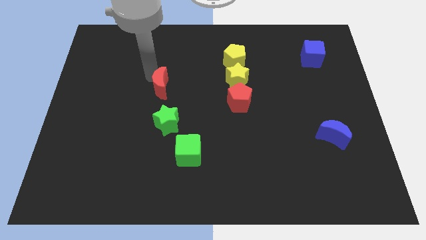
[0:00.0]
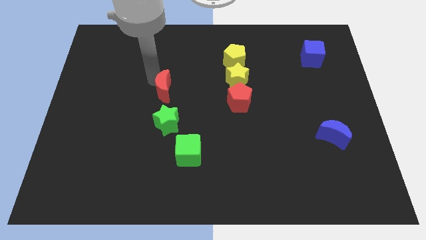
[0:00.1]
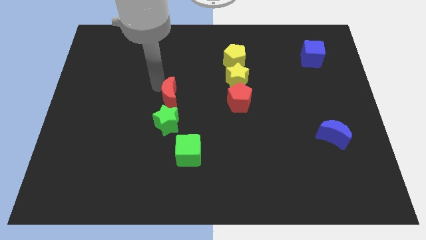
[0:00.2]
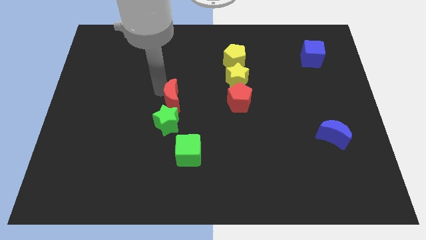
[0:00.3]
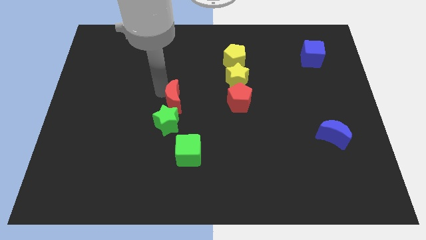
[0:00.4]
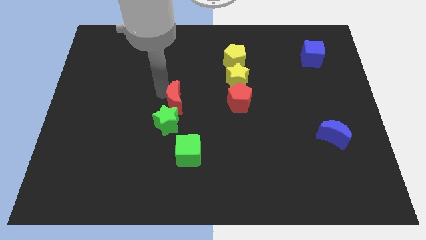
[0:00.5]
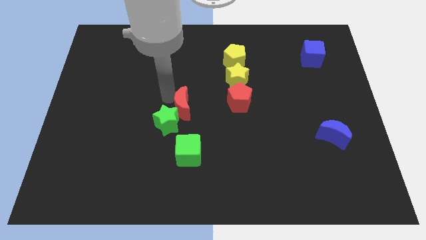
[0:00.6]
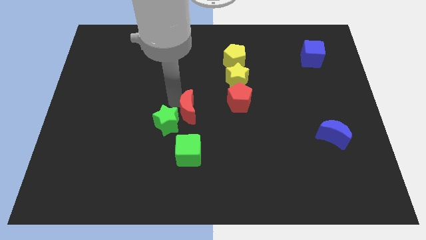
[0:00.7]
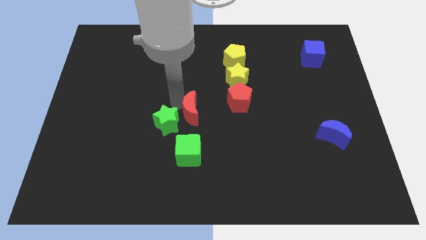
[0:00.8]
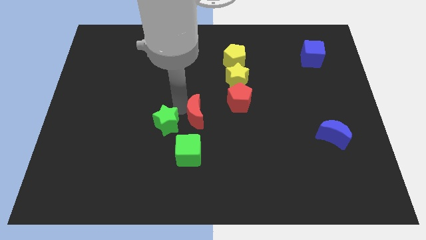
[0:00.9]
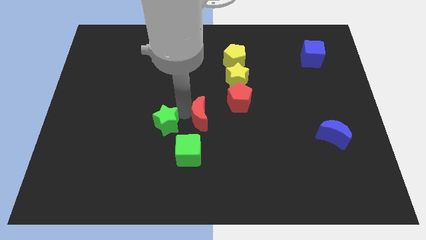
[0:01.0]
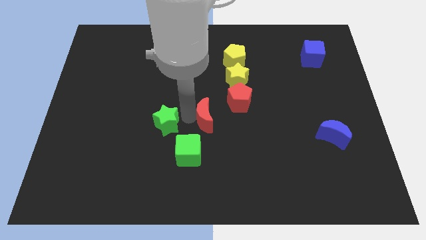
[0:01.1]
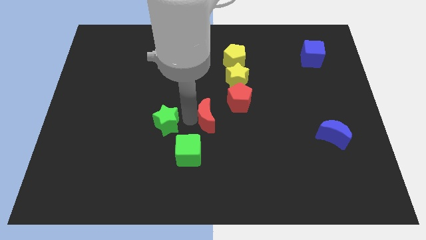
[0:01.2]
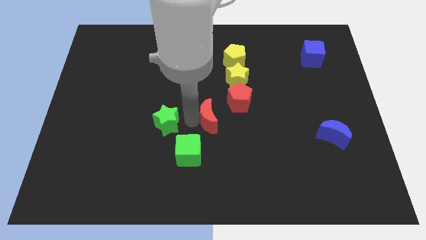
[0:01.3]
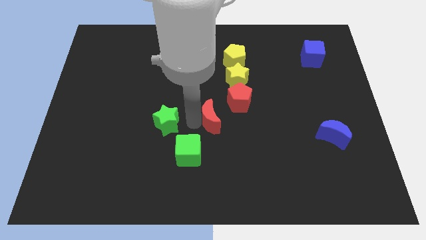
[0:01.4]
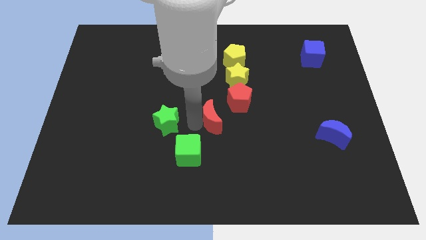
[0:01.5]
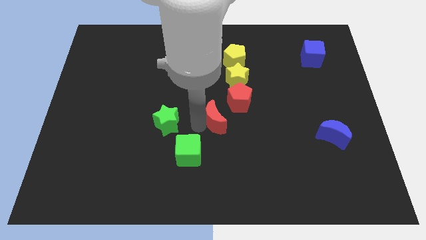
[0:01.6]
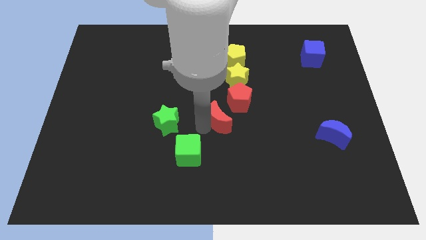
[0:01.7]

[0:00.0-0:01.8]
put red moon parallel right to green star

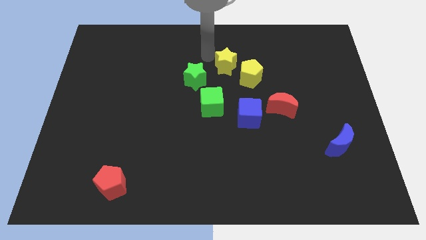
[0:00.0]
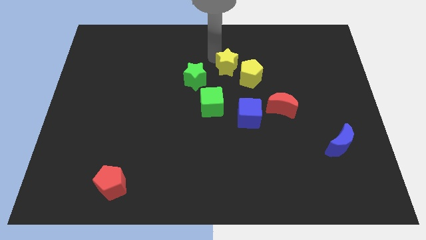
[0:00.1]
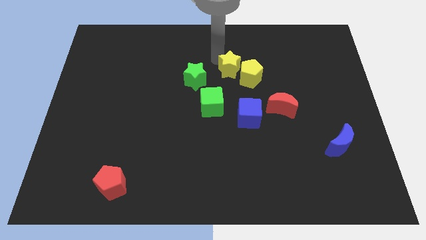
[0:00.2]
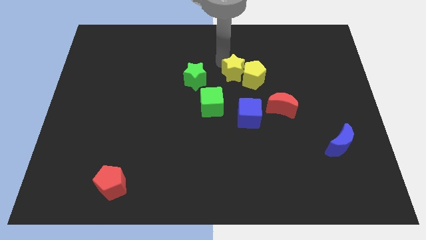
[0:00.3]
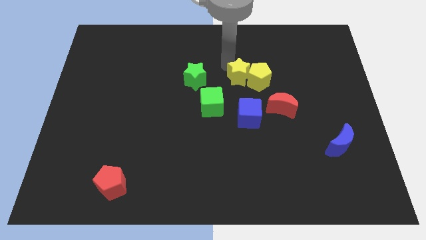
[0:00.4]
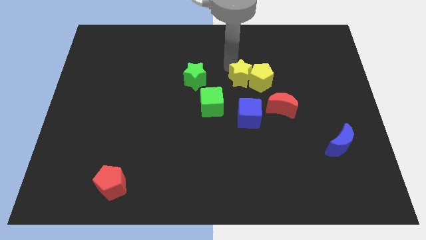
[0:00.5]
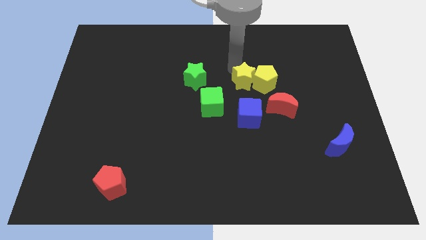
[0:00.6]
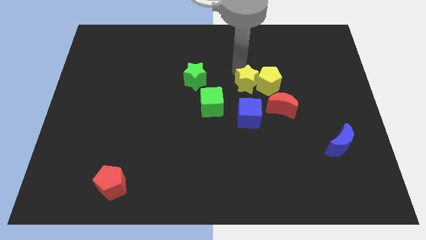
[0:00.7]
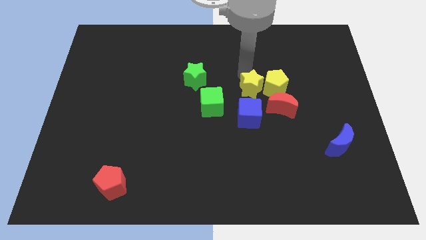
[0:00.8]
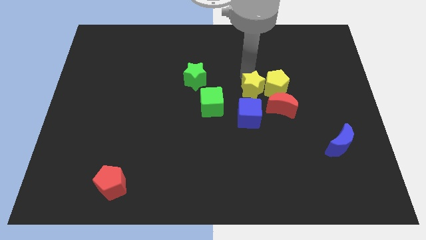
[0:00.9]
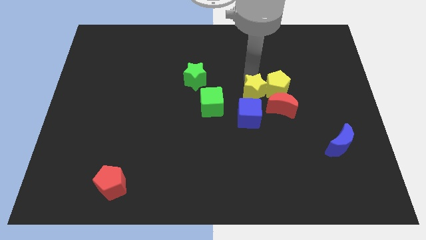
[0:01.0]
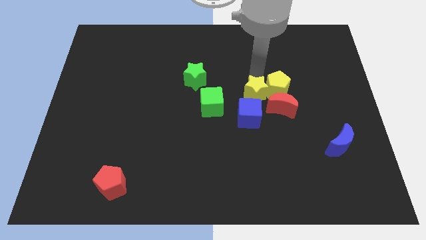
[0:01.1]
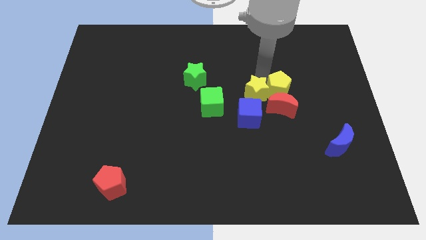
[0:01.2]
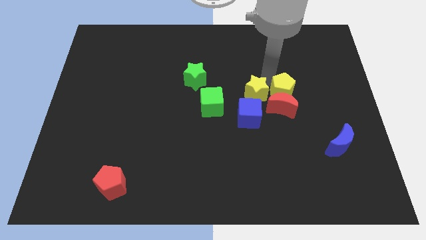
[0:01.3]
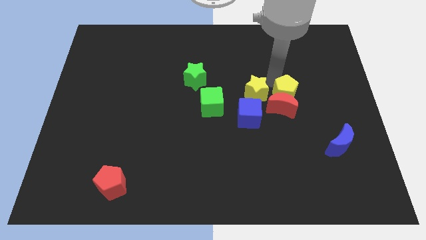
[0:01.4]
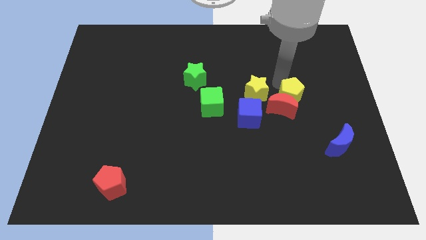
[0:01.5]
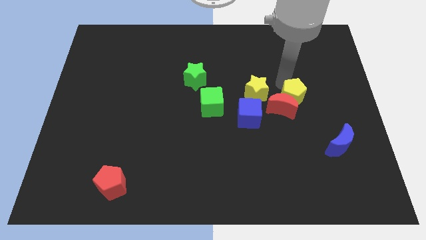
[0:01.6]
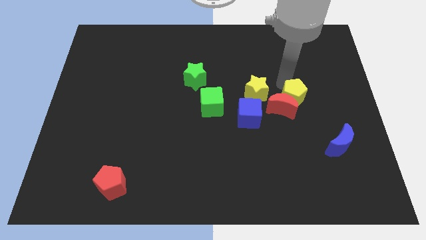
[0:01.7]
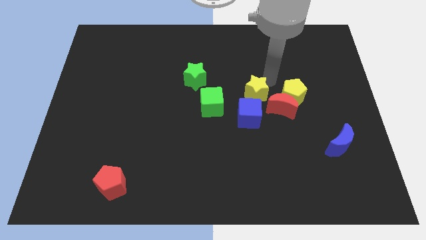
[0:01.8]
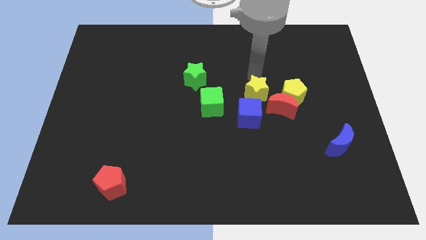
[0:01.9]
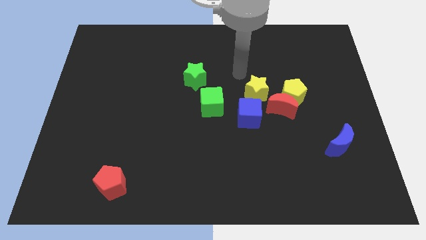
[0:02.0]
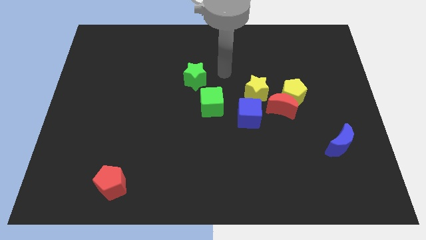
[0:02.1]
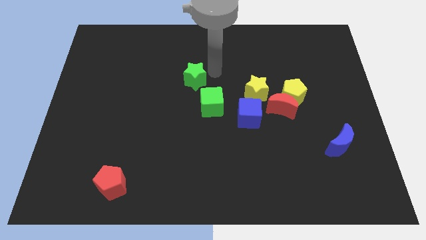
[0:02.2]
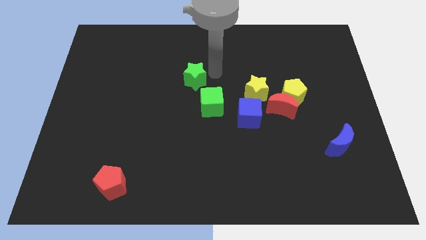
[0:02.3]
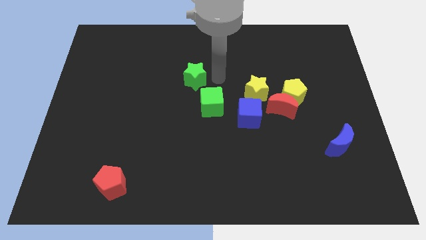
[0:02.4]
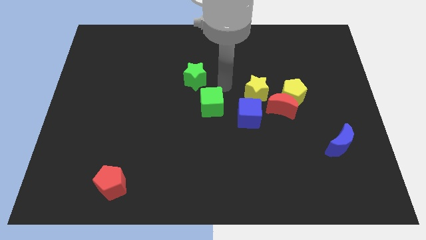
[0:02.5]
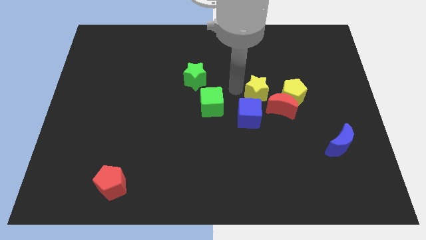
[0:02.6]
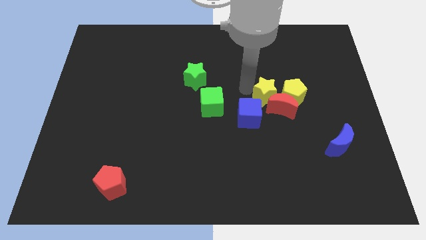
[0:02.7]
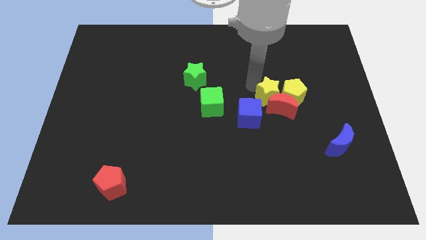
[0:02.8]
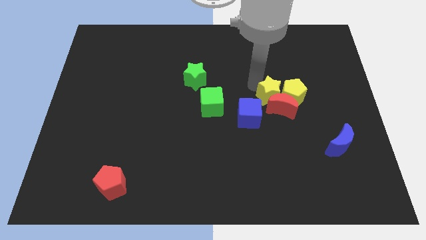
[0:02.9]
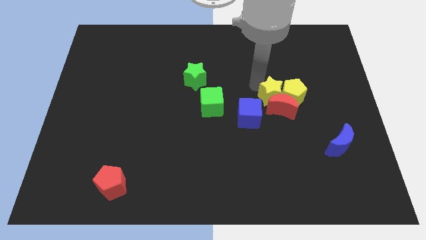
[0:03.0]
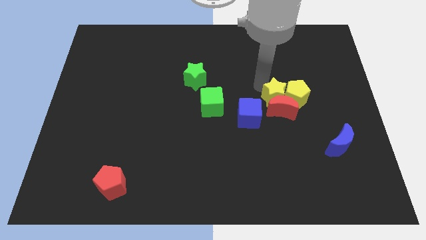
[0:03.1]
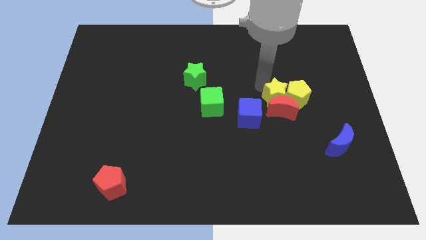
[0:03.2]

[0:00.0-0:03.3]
push the yellow star into the yellow pentagon

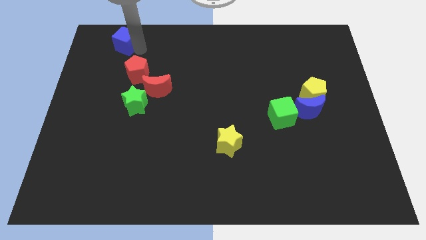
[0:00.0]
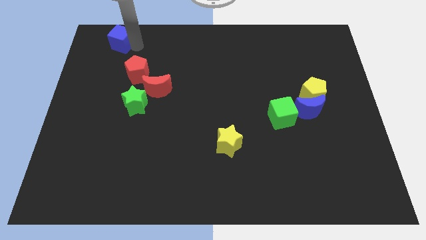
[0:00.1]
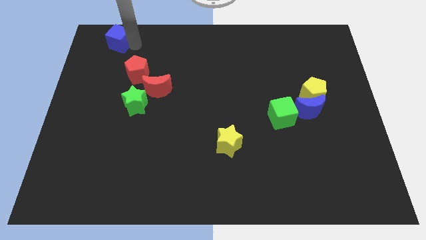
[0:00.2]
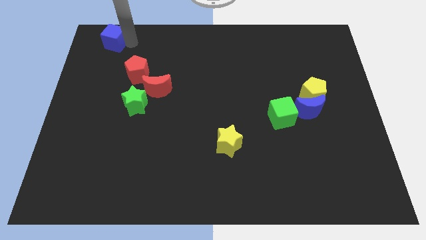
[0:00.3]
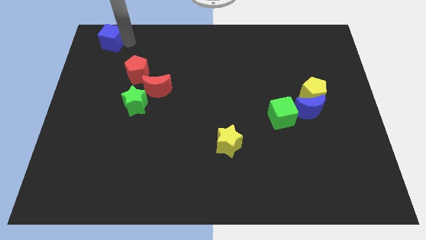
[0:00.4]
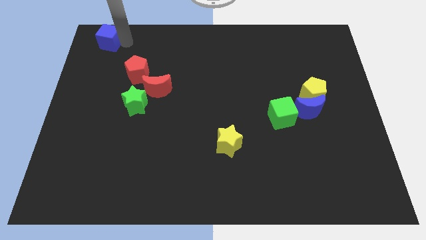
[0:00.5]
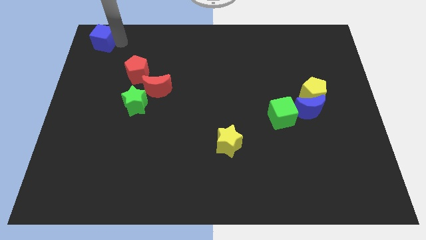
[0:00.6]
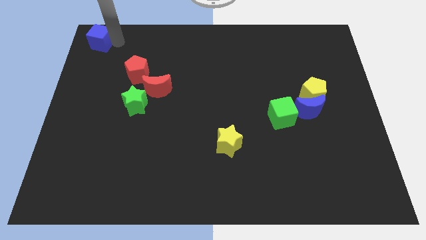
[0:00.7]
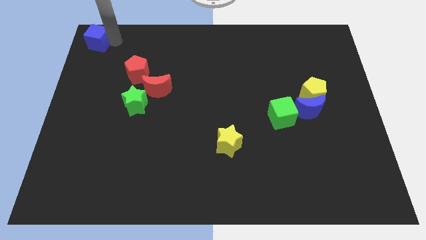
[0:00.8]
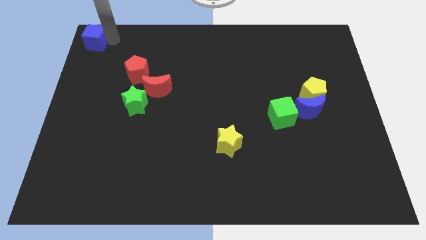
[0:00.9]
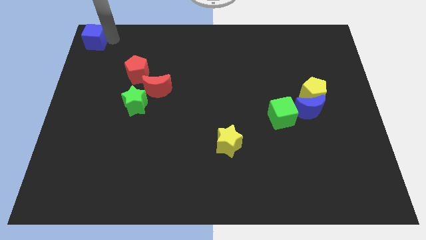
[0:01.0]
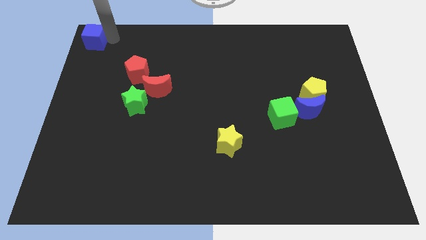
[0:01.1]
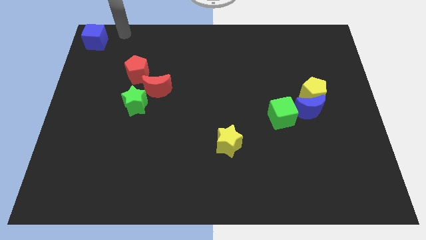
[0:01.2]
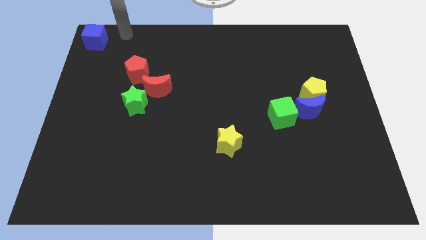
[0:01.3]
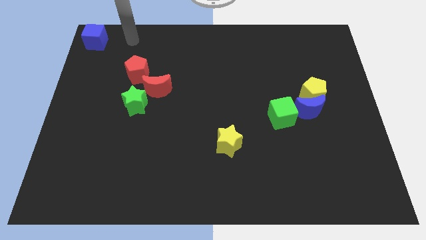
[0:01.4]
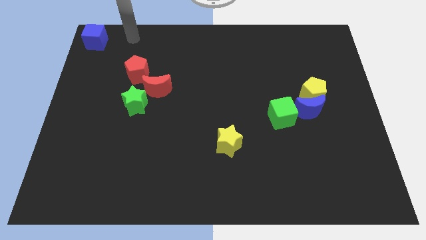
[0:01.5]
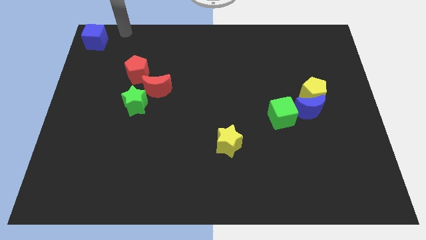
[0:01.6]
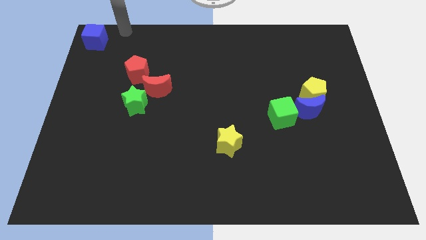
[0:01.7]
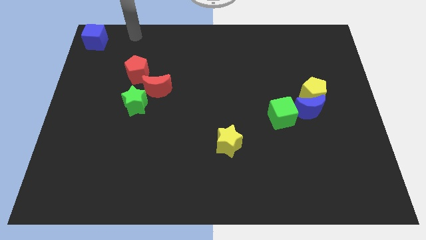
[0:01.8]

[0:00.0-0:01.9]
push the blue cube towards the top left of the board

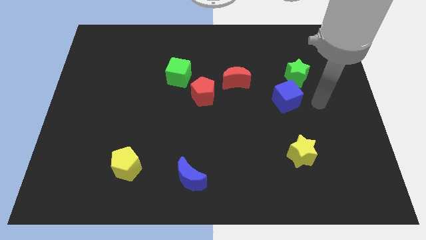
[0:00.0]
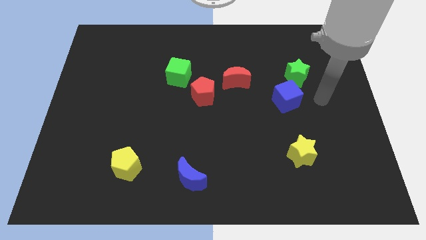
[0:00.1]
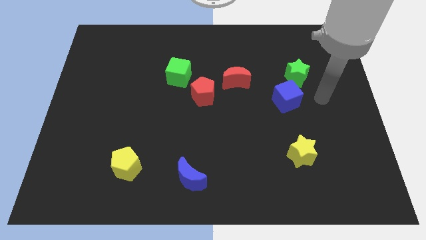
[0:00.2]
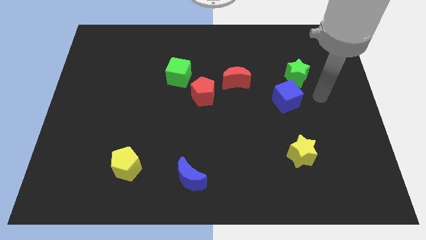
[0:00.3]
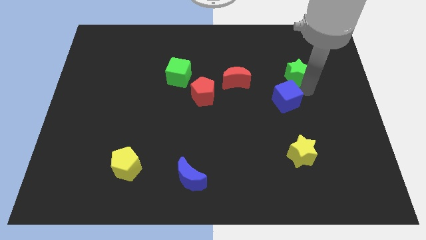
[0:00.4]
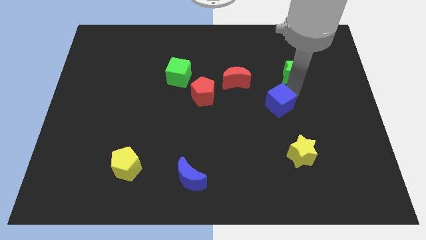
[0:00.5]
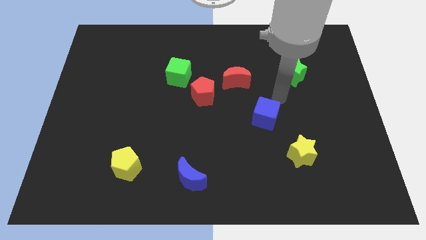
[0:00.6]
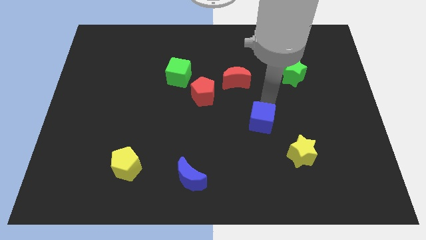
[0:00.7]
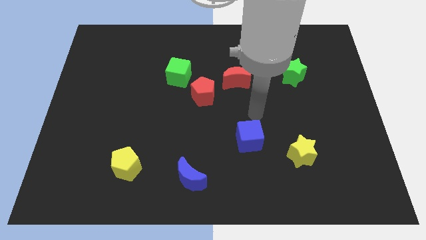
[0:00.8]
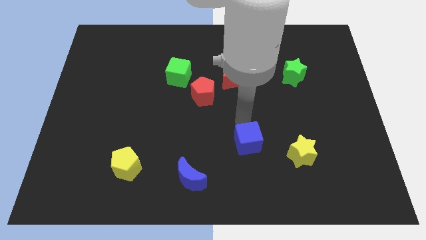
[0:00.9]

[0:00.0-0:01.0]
separate the blue cube from the green star

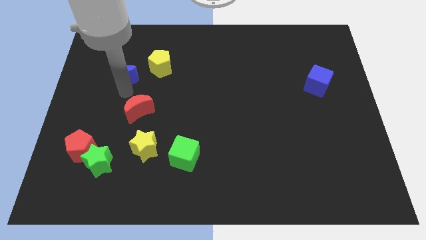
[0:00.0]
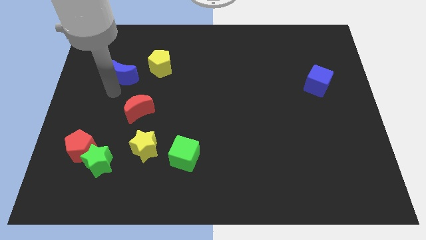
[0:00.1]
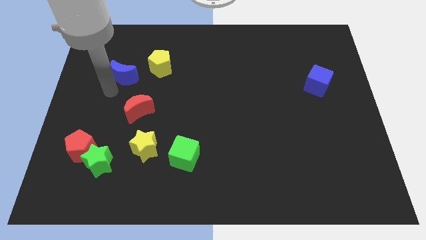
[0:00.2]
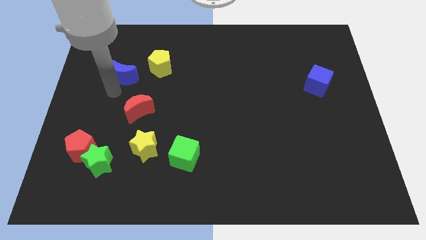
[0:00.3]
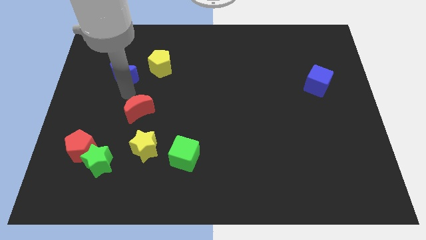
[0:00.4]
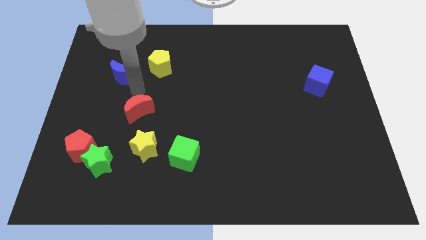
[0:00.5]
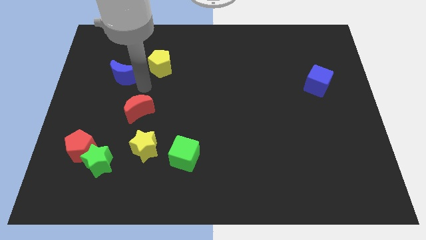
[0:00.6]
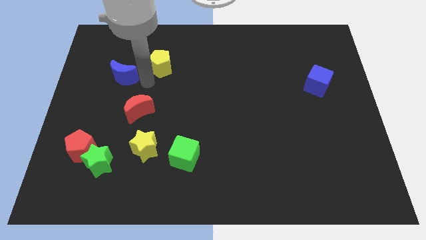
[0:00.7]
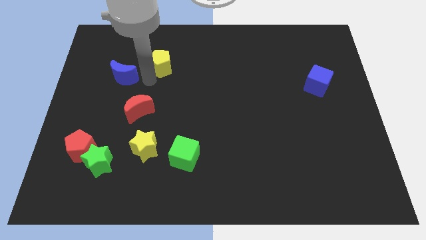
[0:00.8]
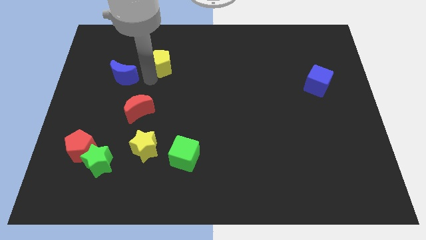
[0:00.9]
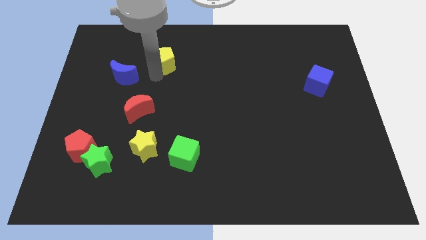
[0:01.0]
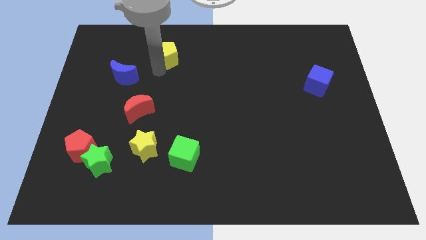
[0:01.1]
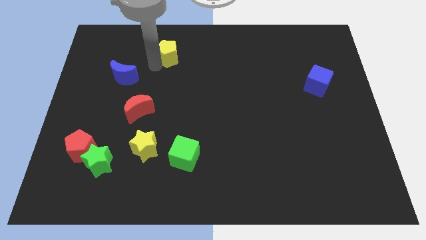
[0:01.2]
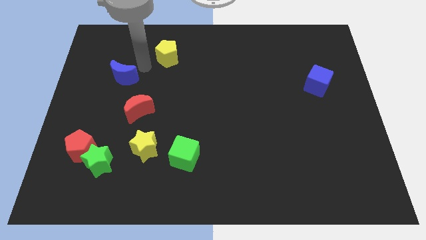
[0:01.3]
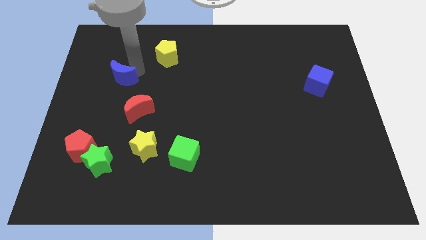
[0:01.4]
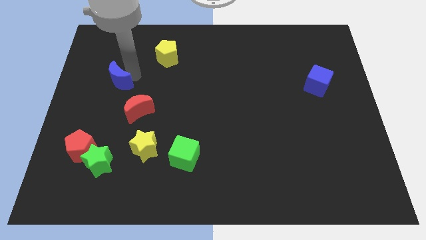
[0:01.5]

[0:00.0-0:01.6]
move yellow pentagon towards the top center of the board
